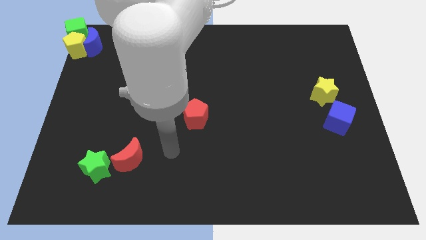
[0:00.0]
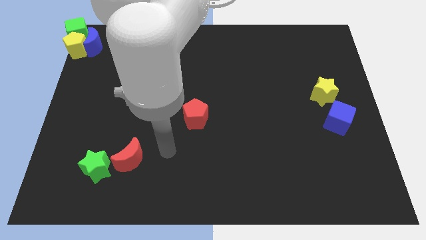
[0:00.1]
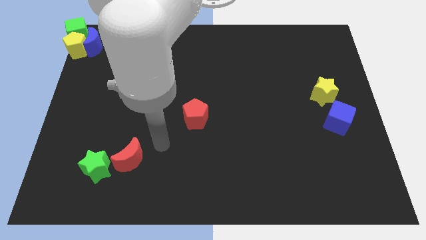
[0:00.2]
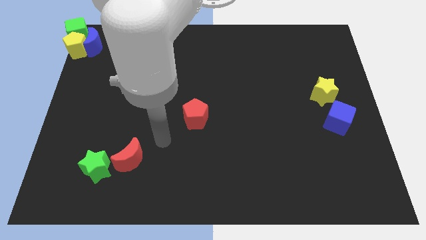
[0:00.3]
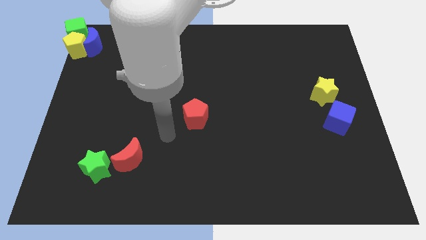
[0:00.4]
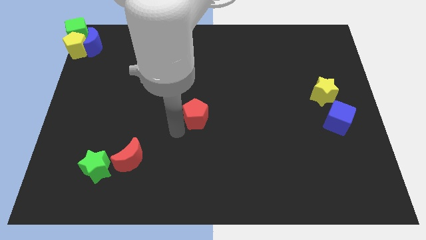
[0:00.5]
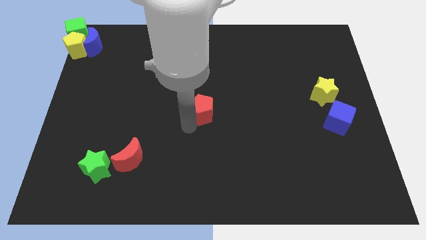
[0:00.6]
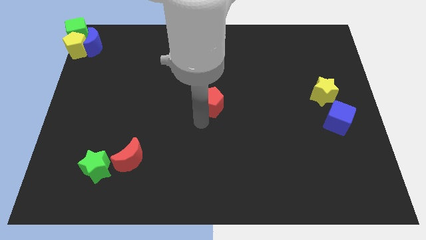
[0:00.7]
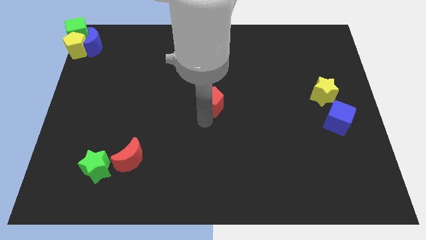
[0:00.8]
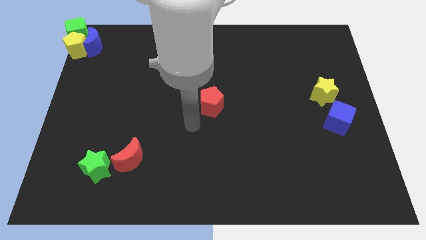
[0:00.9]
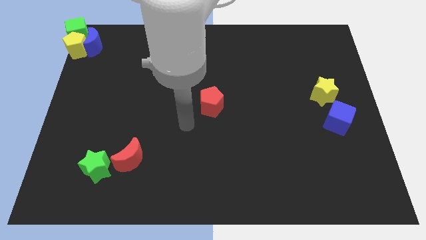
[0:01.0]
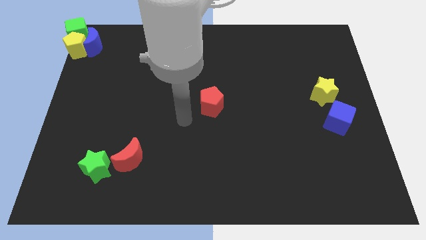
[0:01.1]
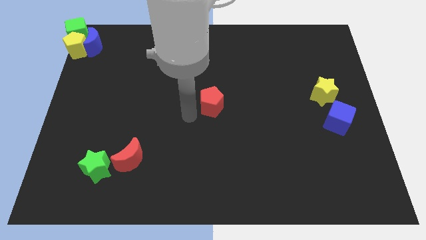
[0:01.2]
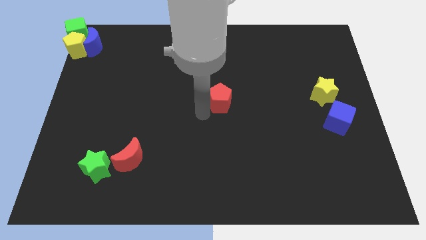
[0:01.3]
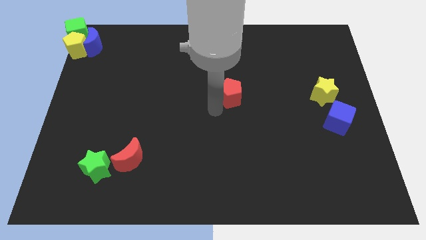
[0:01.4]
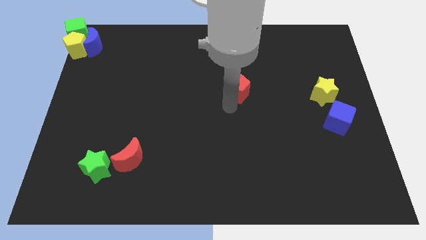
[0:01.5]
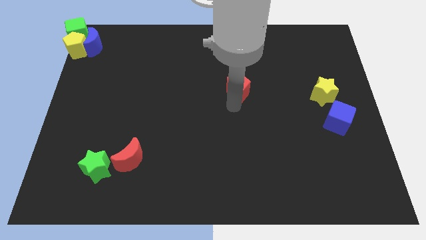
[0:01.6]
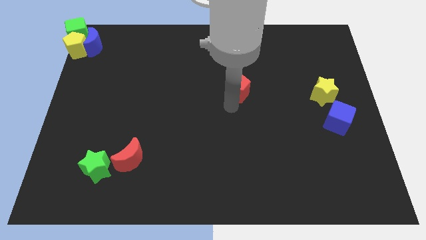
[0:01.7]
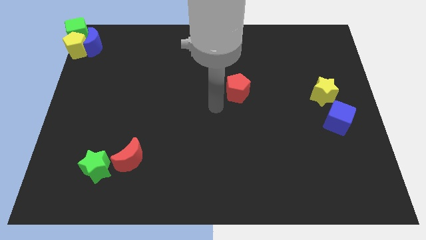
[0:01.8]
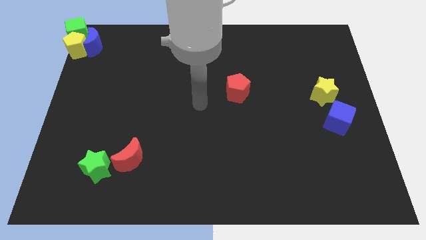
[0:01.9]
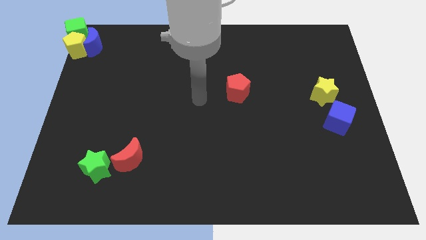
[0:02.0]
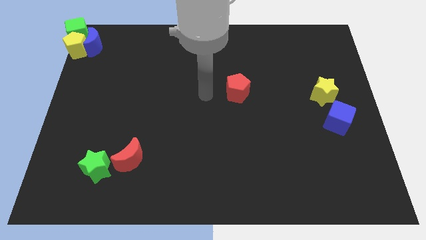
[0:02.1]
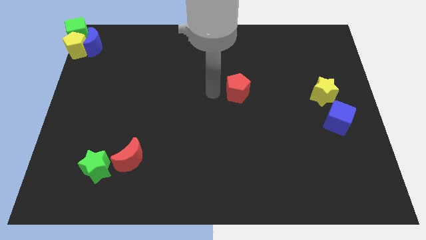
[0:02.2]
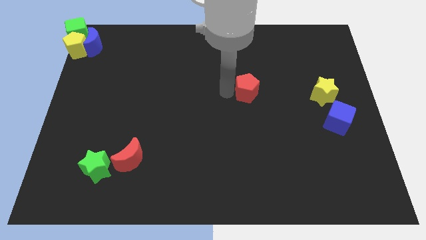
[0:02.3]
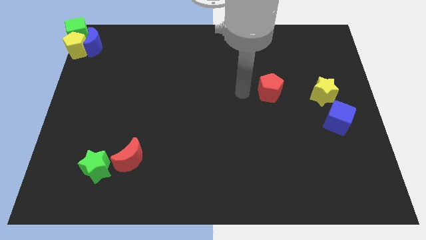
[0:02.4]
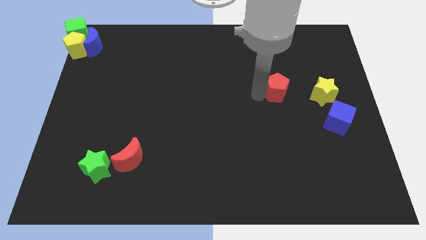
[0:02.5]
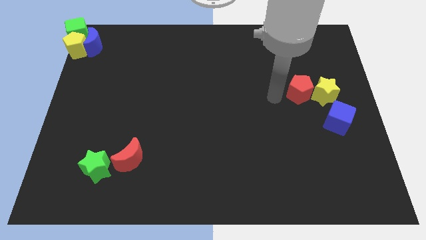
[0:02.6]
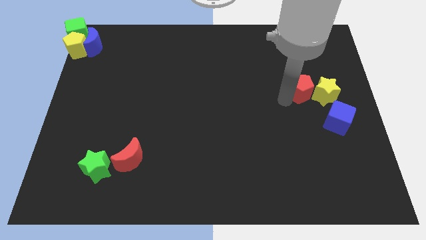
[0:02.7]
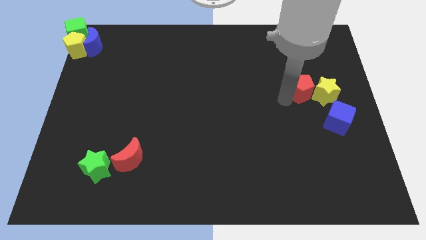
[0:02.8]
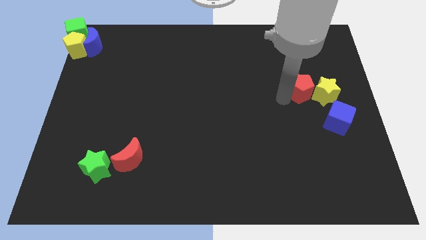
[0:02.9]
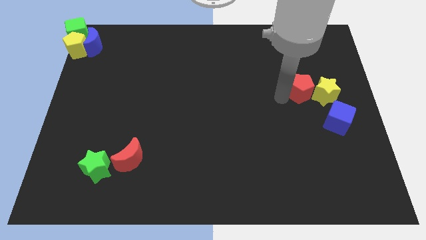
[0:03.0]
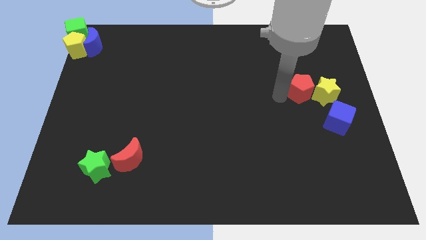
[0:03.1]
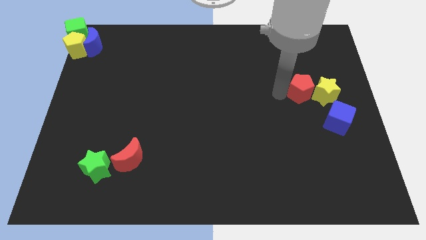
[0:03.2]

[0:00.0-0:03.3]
push red pentagon beside yellow star

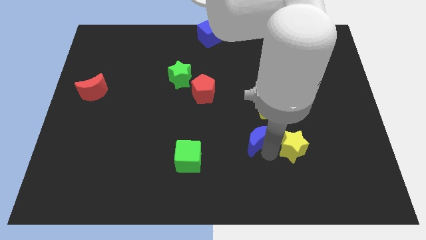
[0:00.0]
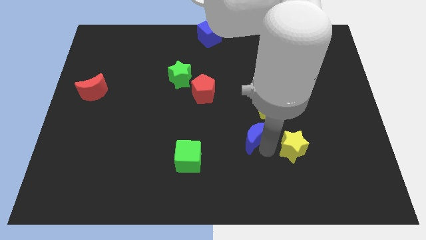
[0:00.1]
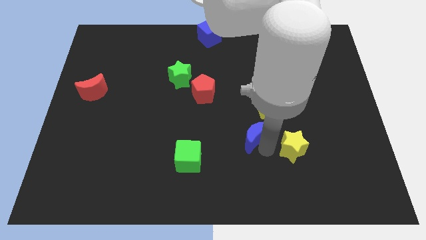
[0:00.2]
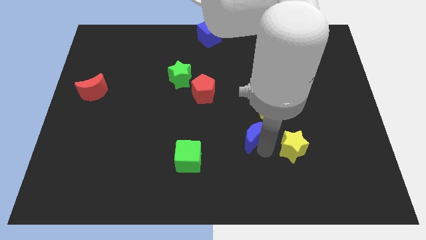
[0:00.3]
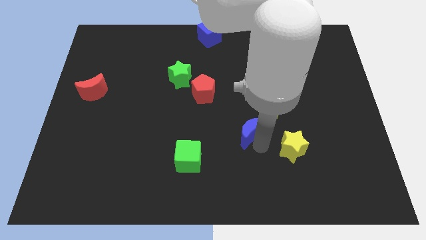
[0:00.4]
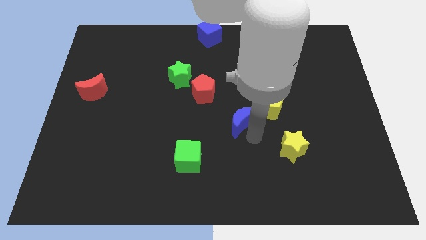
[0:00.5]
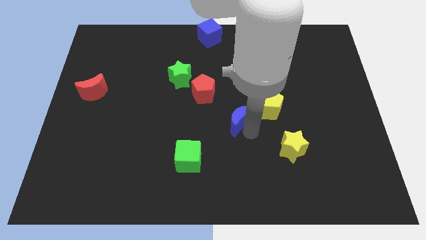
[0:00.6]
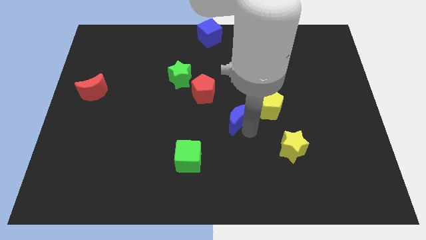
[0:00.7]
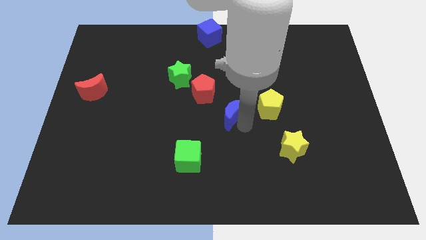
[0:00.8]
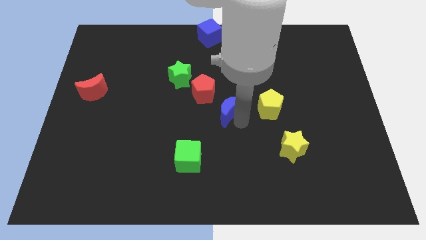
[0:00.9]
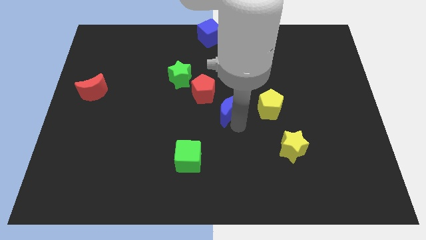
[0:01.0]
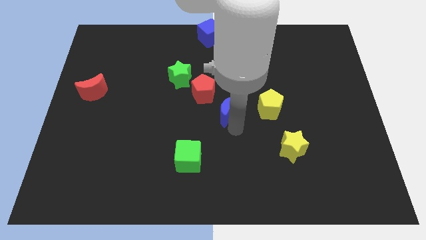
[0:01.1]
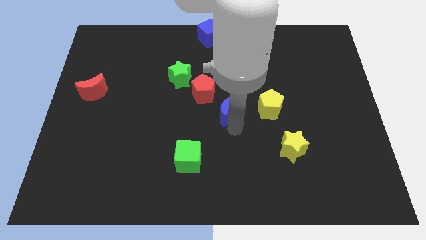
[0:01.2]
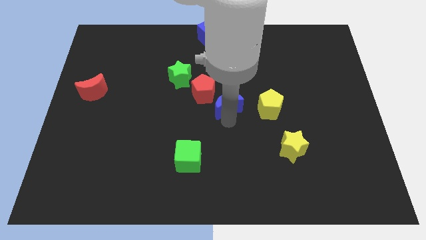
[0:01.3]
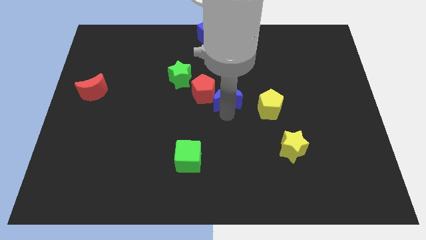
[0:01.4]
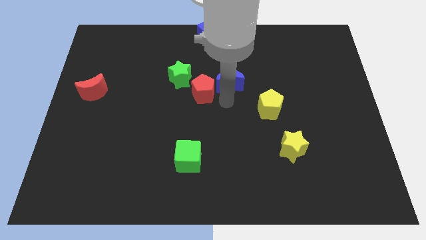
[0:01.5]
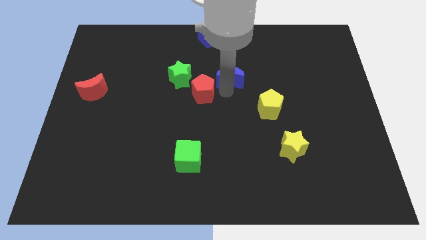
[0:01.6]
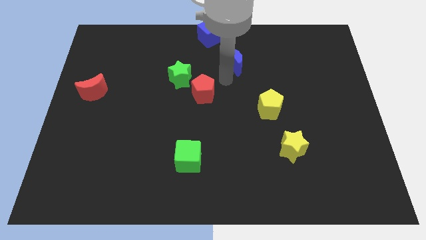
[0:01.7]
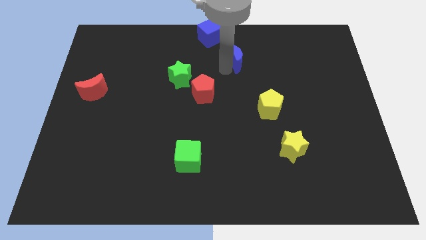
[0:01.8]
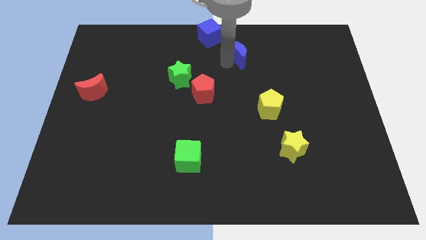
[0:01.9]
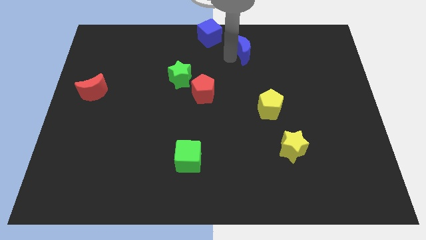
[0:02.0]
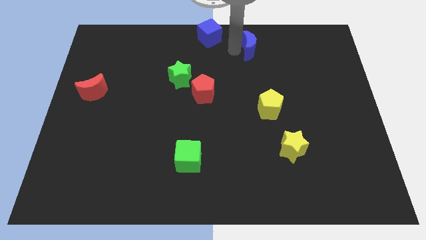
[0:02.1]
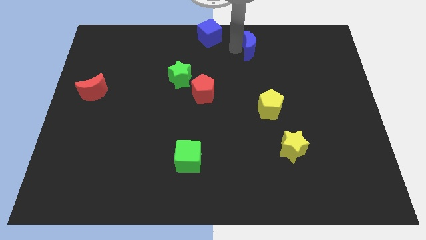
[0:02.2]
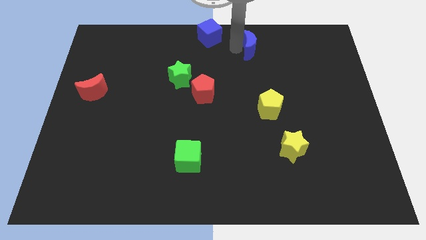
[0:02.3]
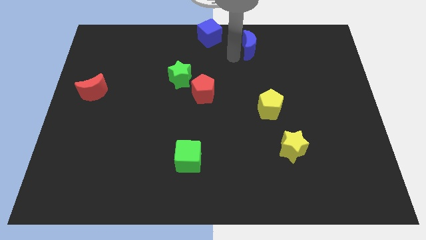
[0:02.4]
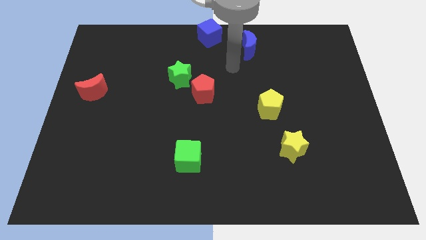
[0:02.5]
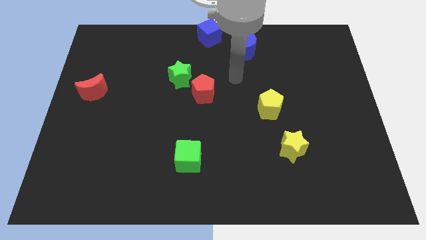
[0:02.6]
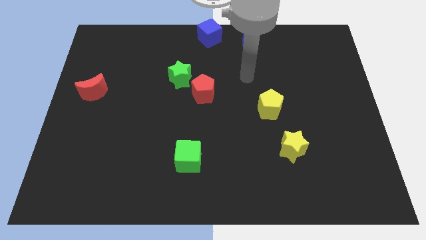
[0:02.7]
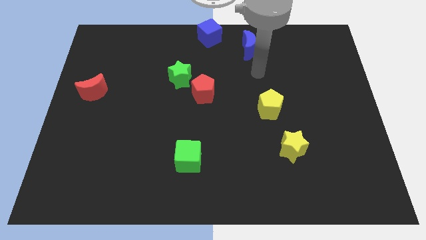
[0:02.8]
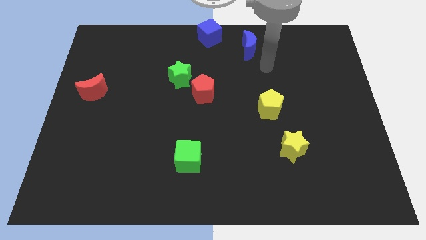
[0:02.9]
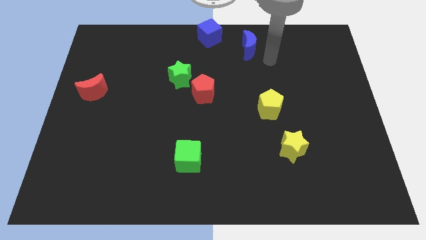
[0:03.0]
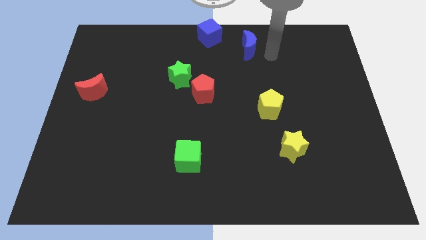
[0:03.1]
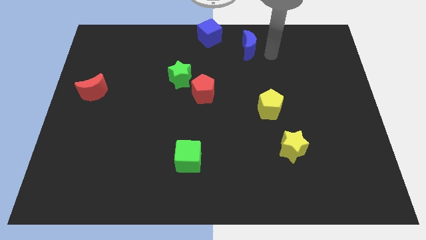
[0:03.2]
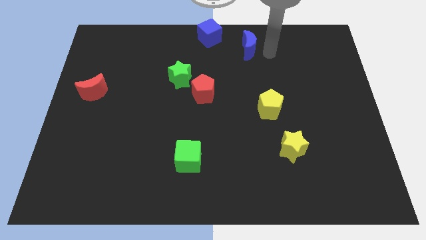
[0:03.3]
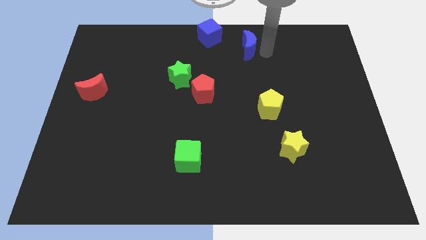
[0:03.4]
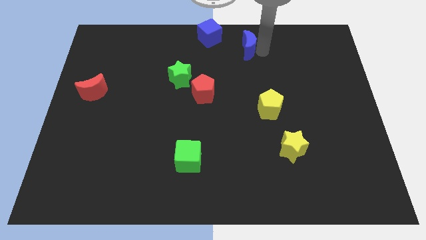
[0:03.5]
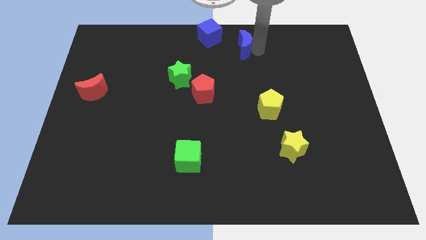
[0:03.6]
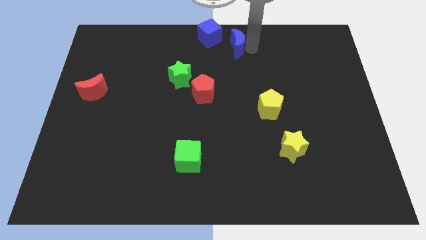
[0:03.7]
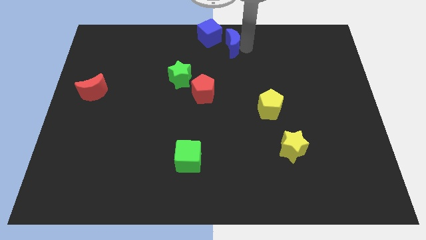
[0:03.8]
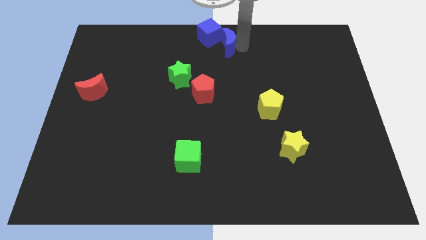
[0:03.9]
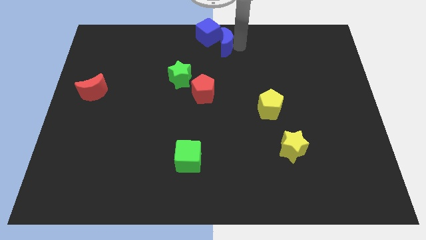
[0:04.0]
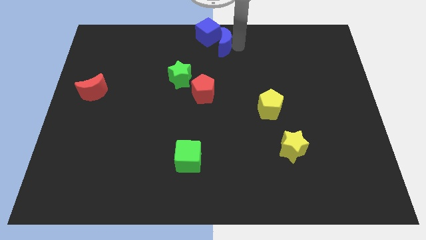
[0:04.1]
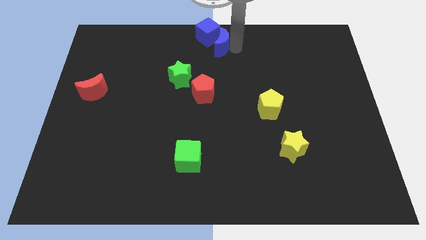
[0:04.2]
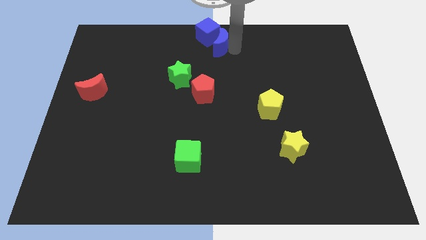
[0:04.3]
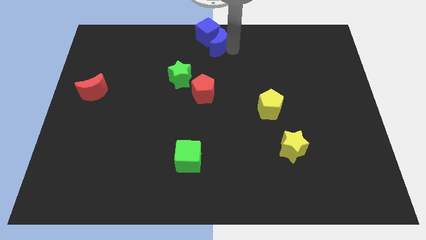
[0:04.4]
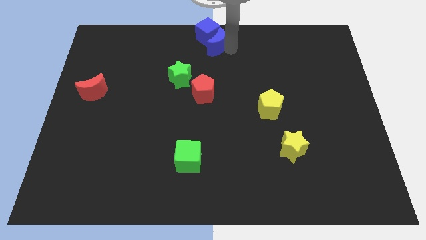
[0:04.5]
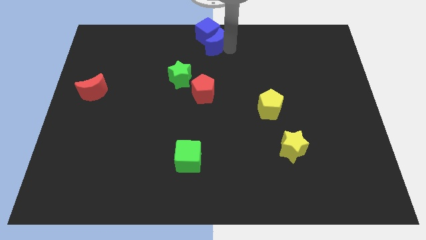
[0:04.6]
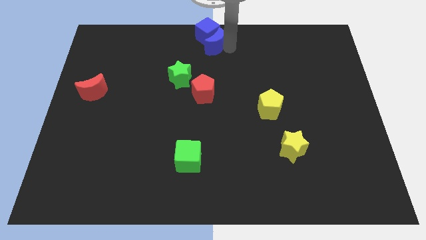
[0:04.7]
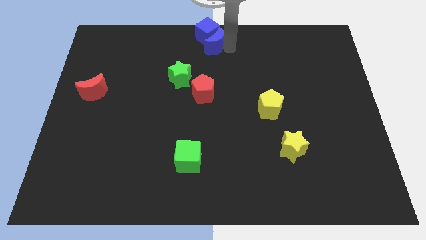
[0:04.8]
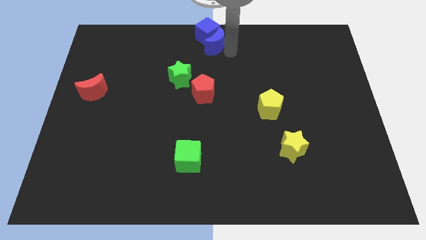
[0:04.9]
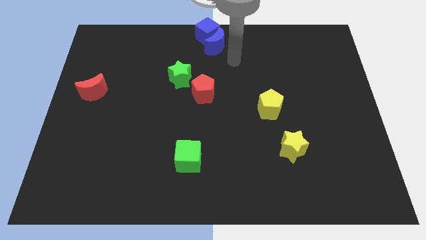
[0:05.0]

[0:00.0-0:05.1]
move the blue crescent to the bottom right of the blue cube

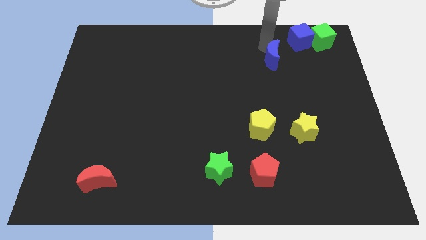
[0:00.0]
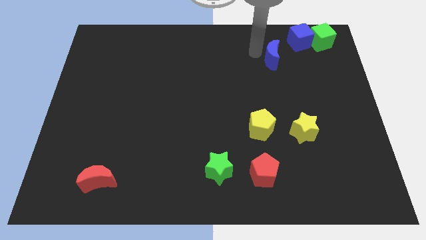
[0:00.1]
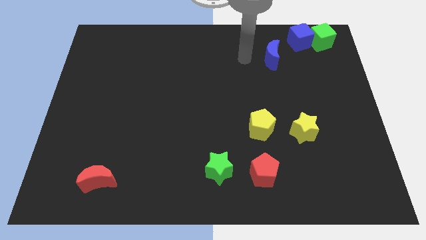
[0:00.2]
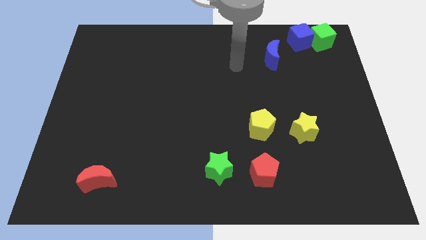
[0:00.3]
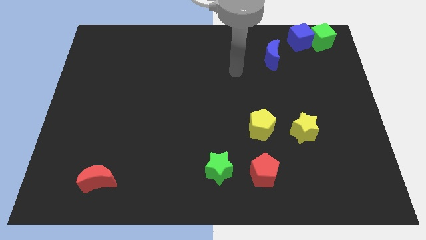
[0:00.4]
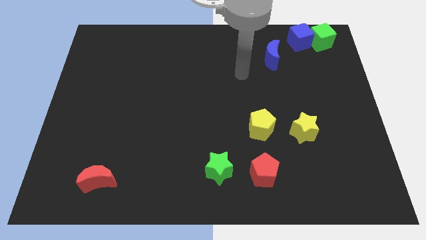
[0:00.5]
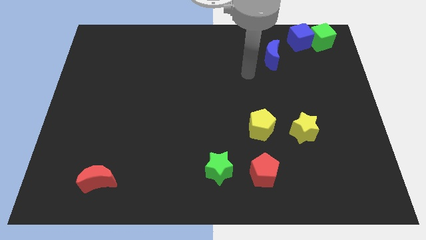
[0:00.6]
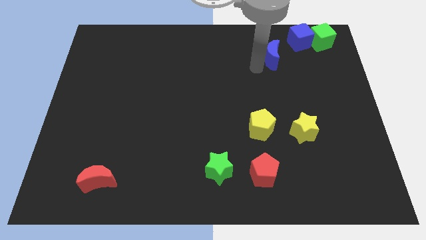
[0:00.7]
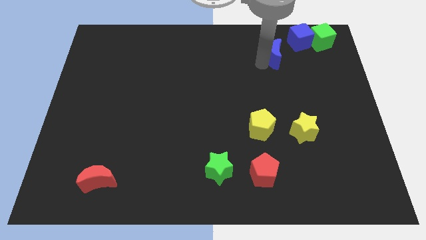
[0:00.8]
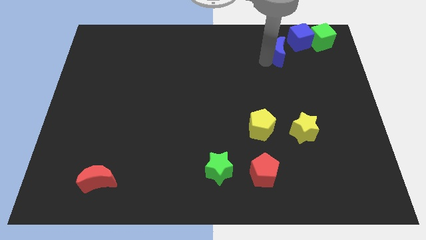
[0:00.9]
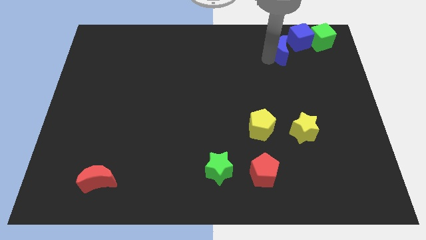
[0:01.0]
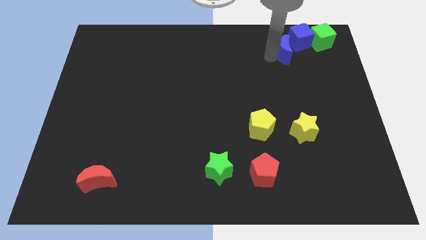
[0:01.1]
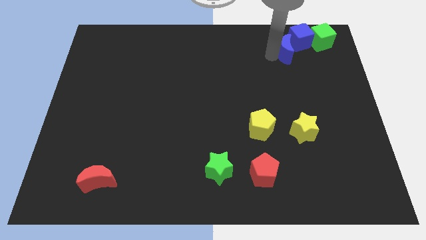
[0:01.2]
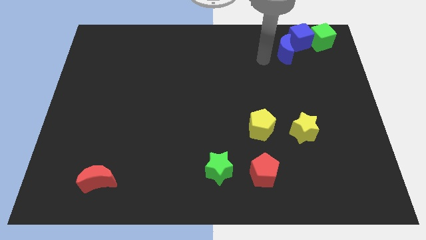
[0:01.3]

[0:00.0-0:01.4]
push the blue crescent towards the top right
